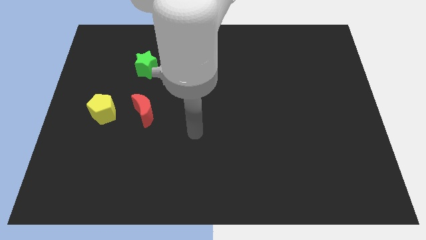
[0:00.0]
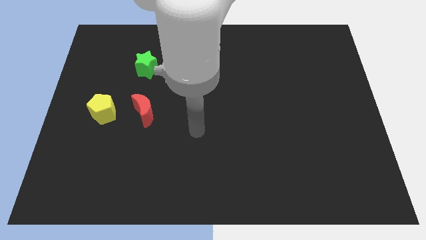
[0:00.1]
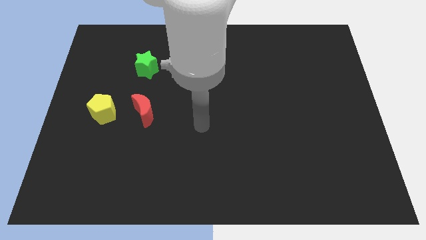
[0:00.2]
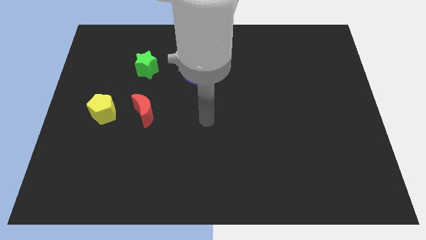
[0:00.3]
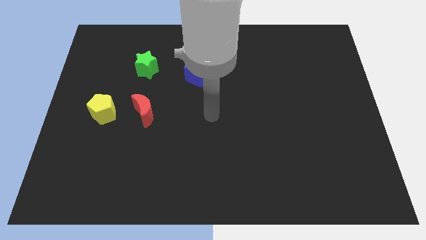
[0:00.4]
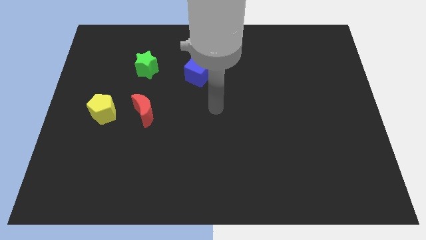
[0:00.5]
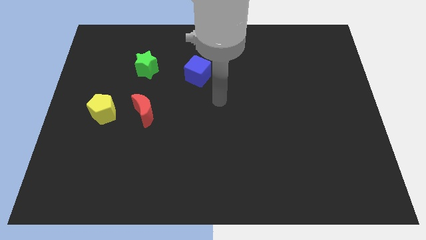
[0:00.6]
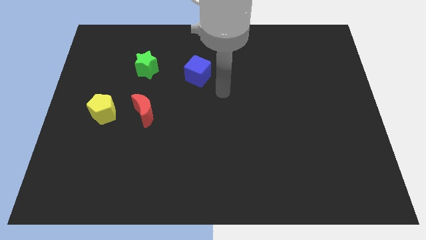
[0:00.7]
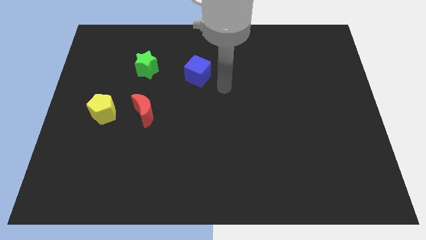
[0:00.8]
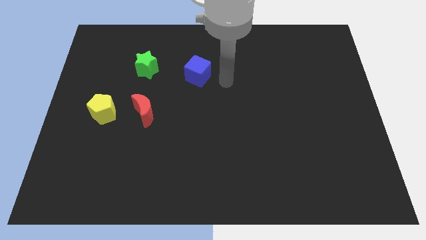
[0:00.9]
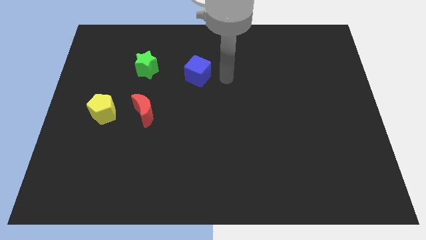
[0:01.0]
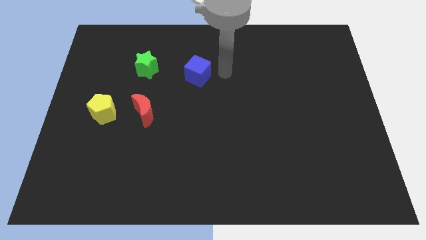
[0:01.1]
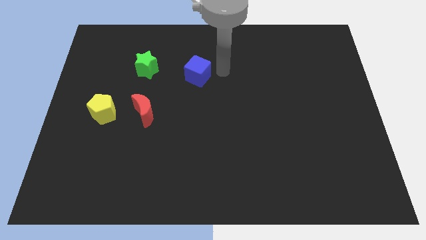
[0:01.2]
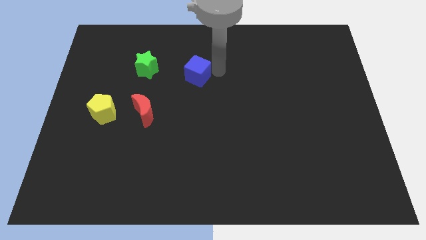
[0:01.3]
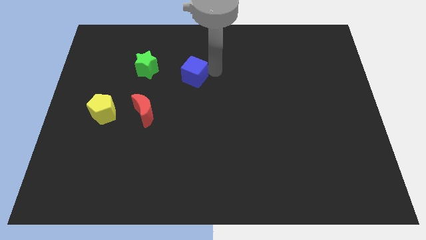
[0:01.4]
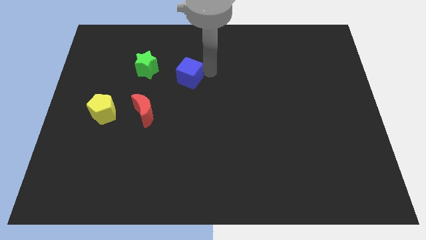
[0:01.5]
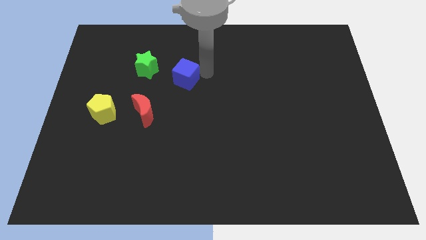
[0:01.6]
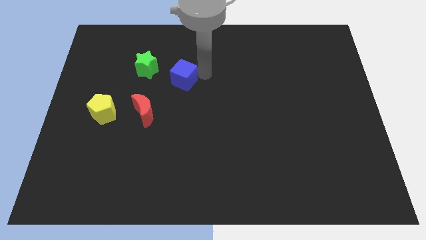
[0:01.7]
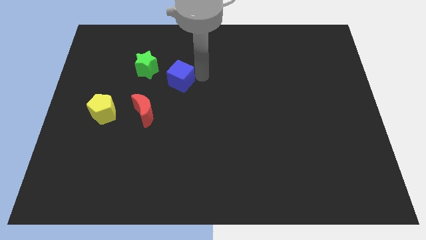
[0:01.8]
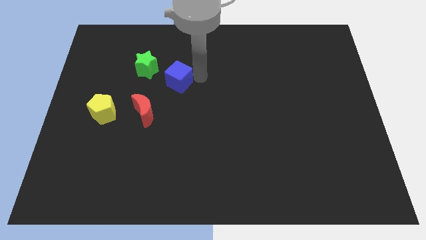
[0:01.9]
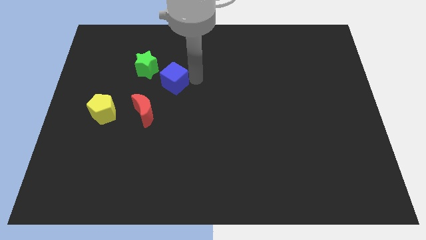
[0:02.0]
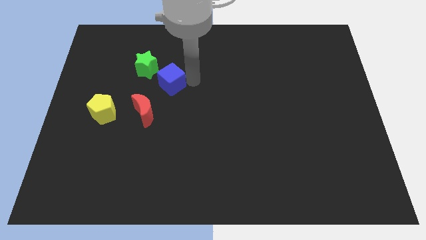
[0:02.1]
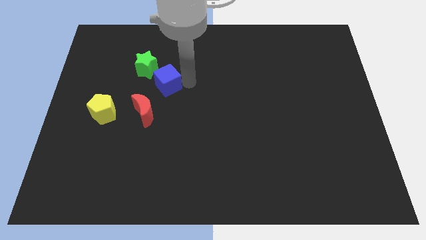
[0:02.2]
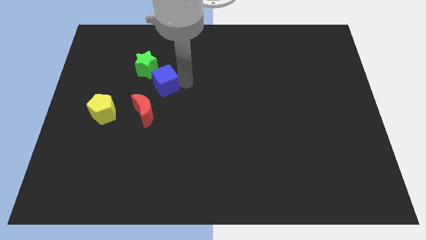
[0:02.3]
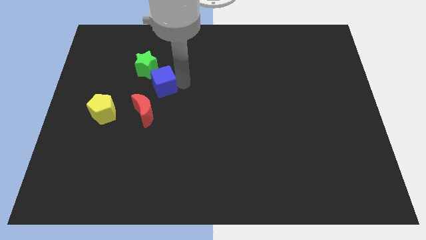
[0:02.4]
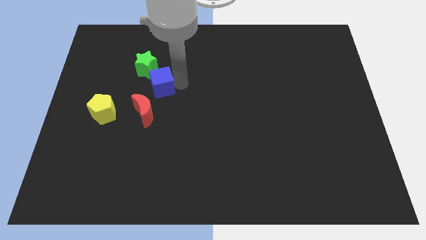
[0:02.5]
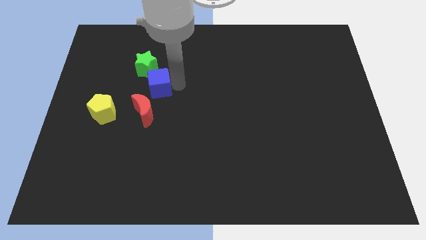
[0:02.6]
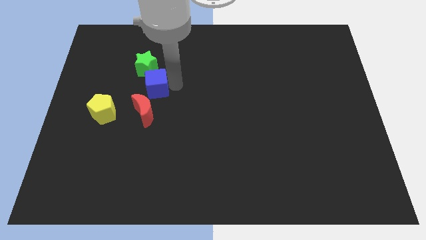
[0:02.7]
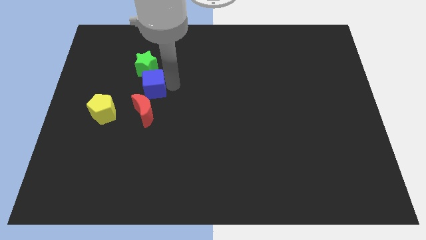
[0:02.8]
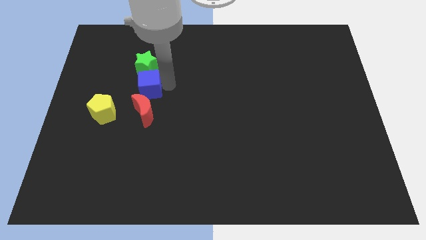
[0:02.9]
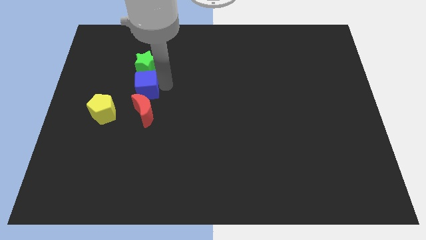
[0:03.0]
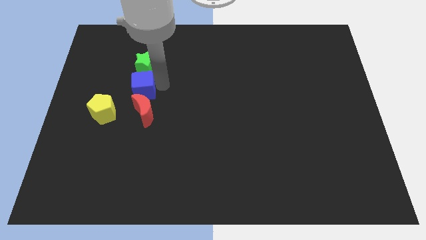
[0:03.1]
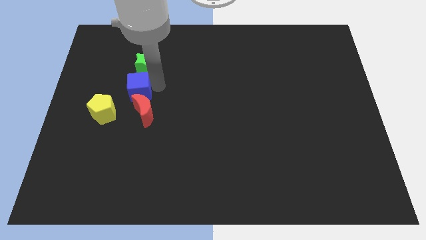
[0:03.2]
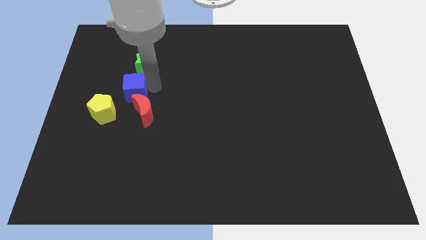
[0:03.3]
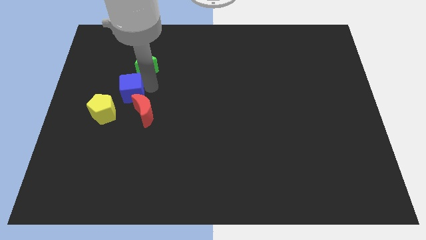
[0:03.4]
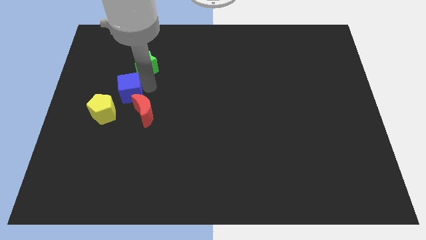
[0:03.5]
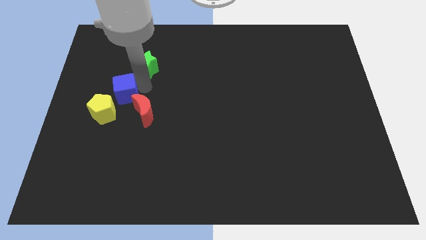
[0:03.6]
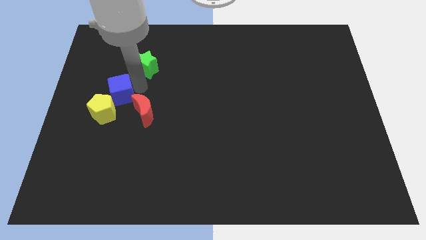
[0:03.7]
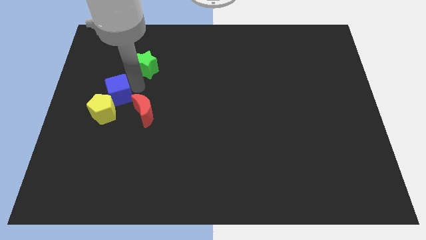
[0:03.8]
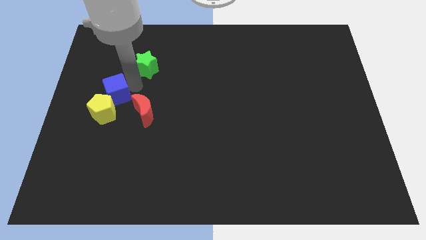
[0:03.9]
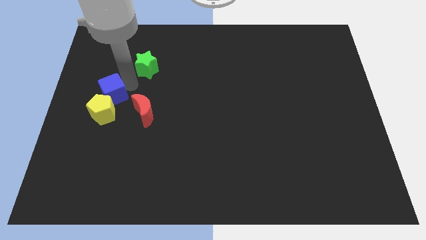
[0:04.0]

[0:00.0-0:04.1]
put the cube to the yellow block

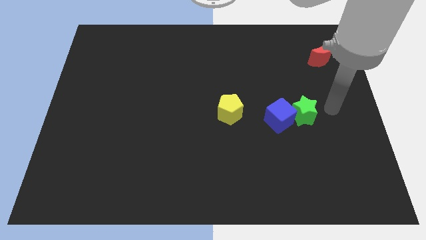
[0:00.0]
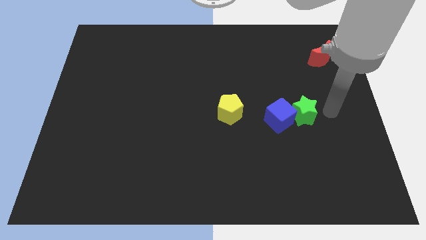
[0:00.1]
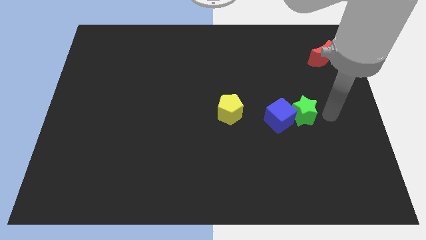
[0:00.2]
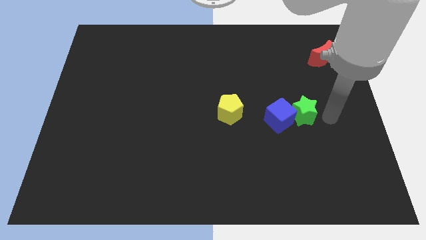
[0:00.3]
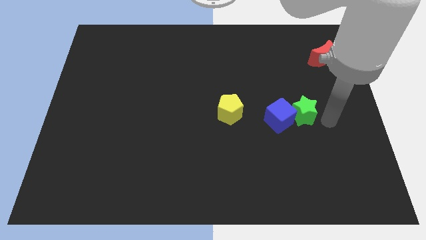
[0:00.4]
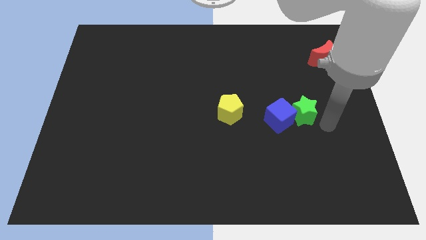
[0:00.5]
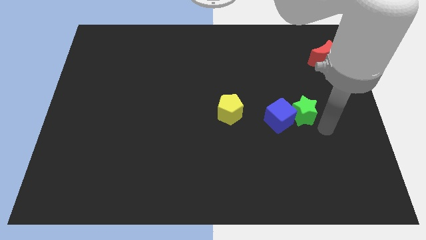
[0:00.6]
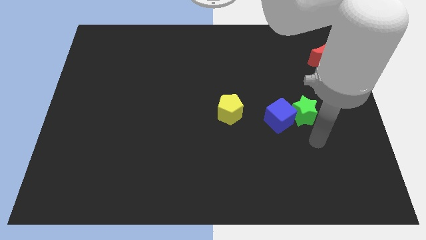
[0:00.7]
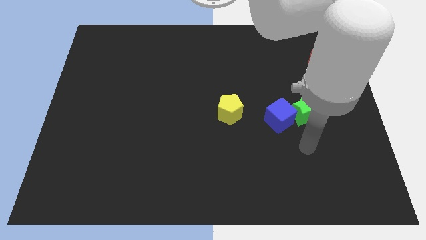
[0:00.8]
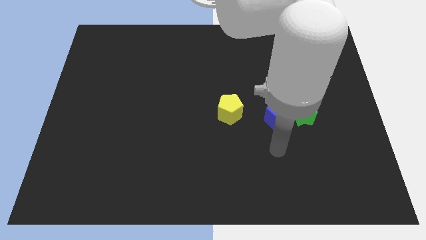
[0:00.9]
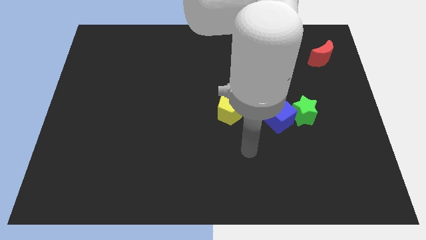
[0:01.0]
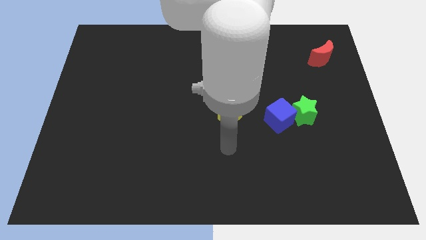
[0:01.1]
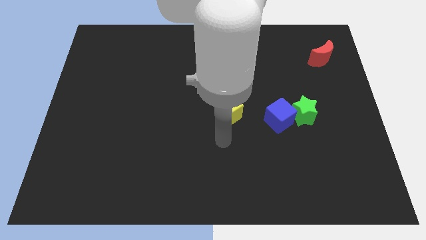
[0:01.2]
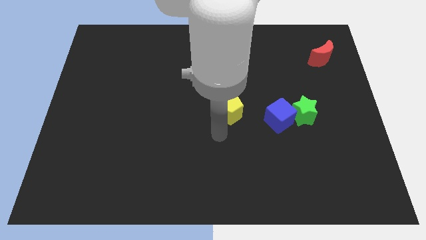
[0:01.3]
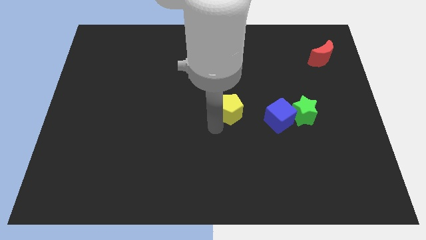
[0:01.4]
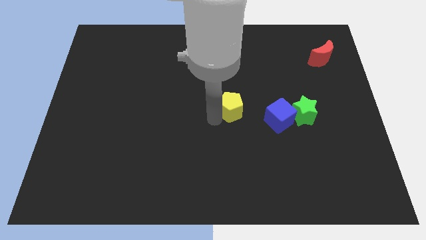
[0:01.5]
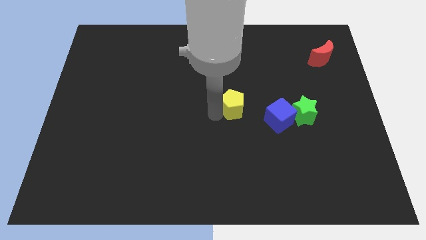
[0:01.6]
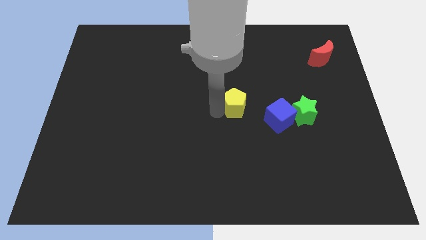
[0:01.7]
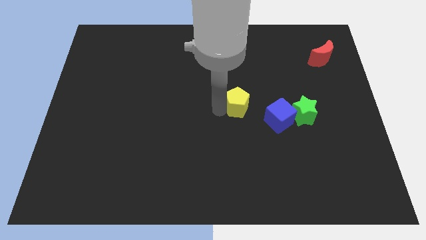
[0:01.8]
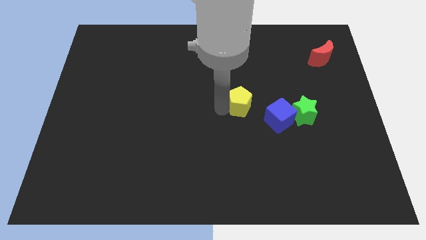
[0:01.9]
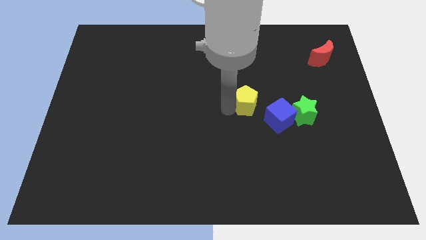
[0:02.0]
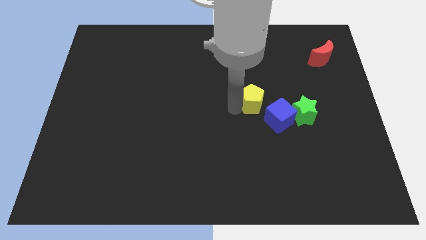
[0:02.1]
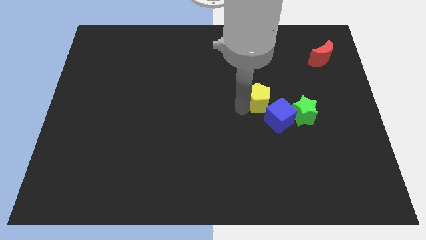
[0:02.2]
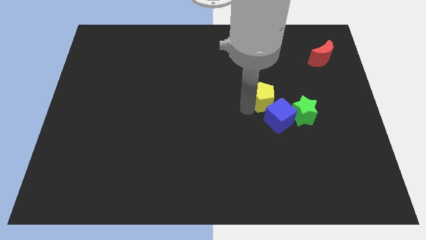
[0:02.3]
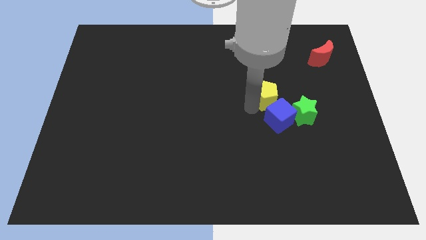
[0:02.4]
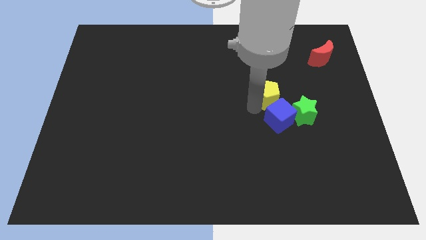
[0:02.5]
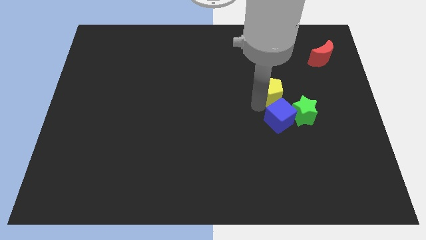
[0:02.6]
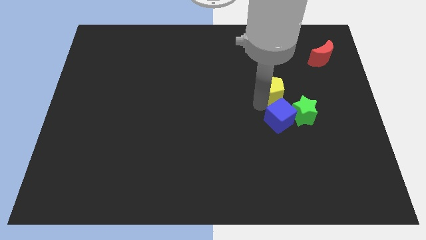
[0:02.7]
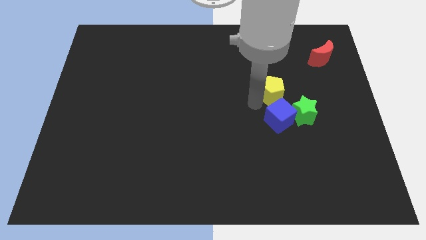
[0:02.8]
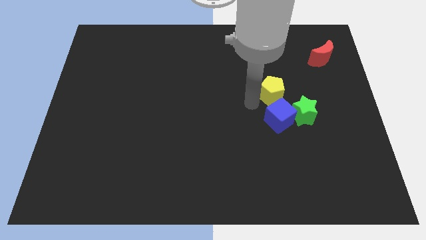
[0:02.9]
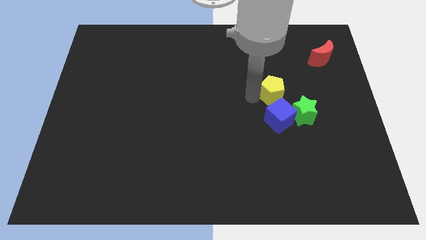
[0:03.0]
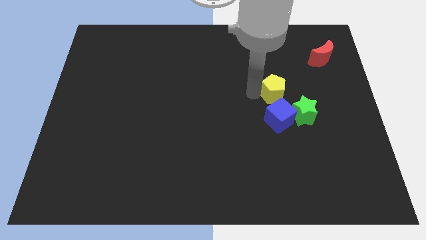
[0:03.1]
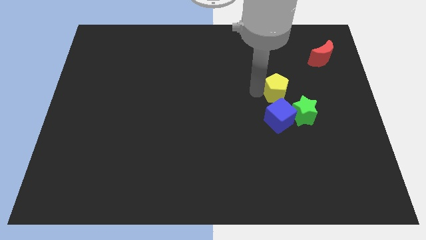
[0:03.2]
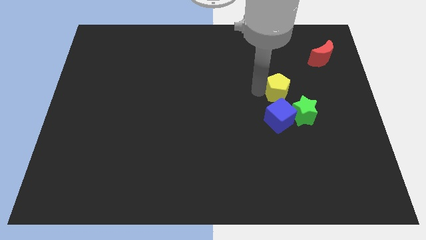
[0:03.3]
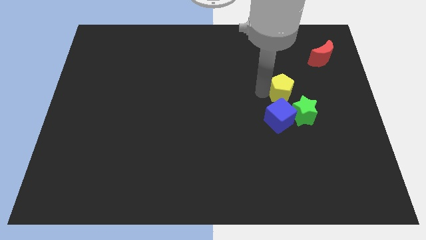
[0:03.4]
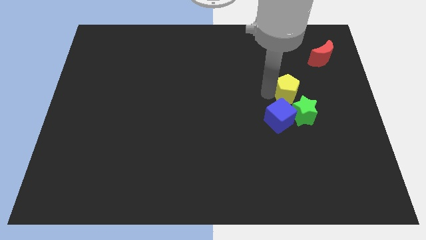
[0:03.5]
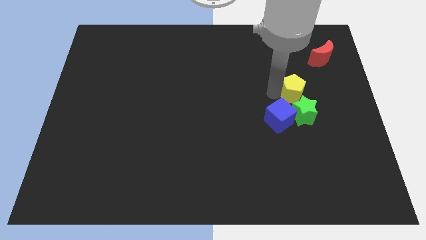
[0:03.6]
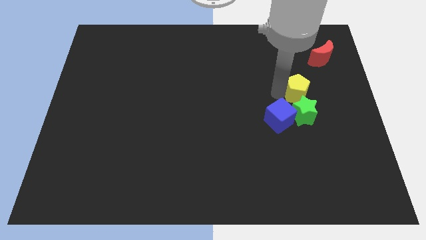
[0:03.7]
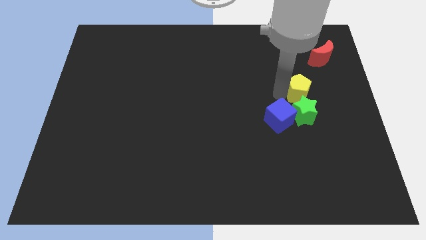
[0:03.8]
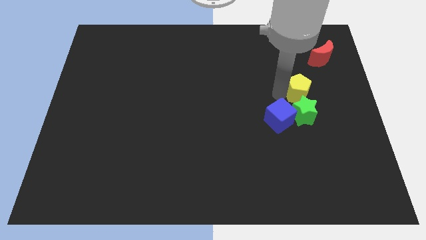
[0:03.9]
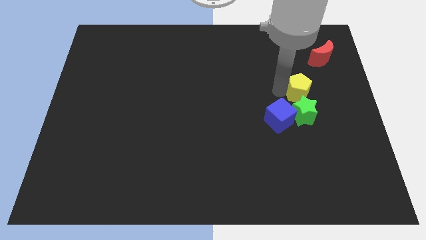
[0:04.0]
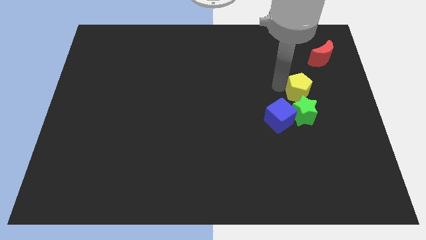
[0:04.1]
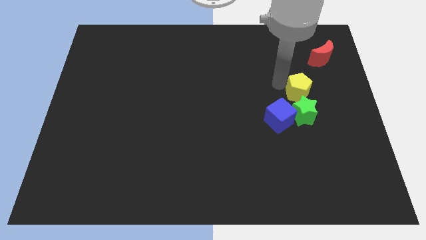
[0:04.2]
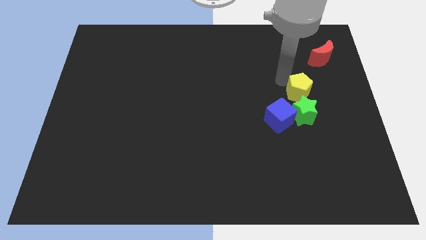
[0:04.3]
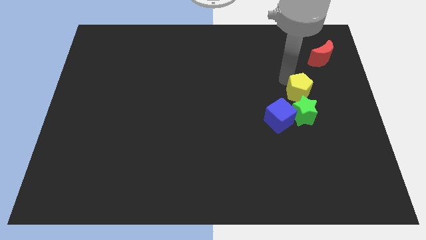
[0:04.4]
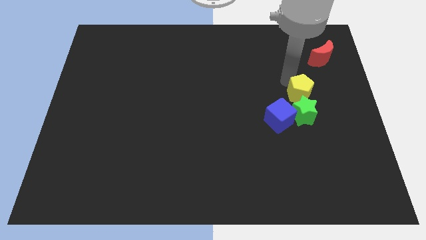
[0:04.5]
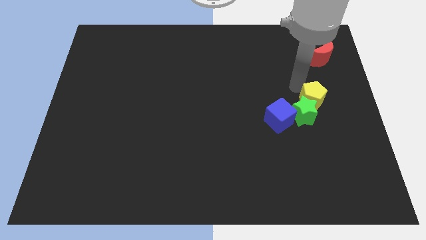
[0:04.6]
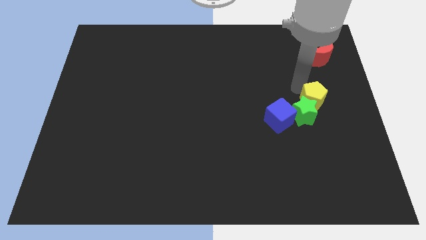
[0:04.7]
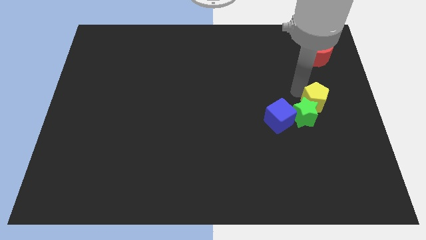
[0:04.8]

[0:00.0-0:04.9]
move the yellow pentagon towards the green block
